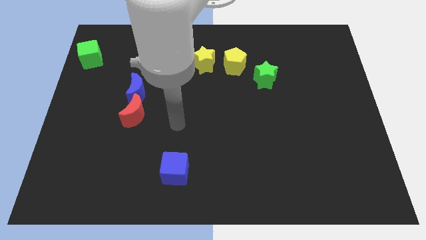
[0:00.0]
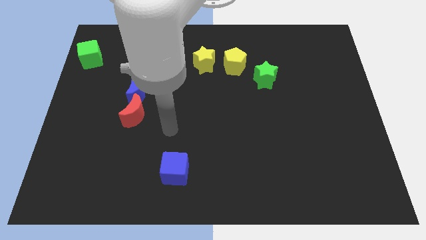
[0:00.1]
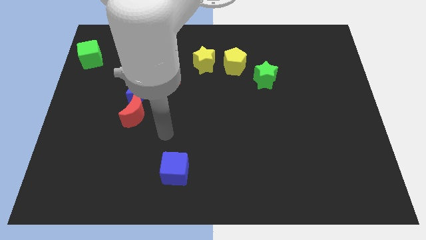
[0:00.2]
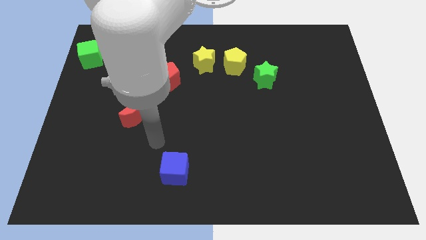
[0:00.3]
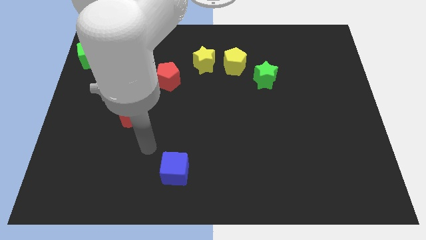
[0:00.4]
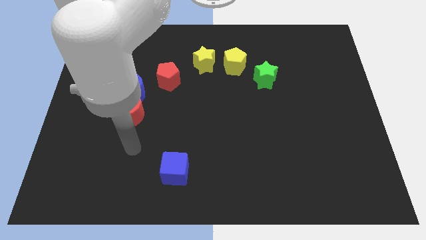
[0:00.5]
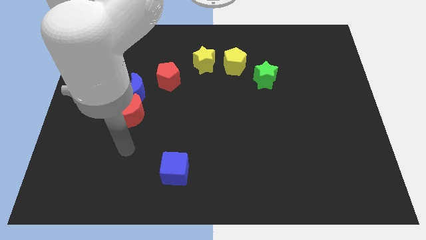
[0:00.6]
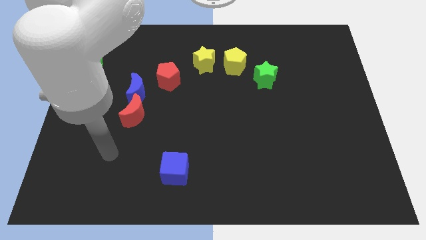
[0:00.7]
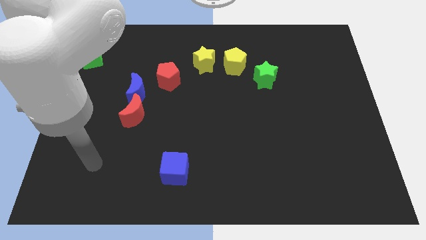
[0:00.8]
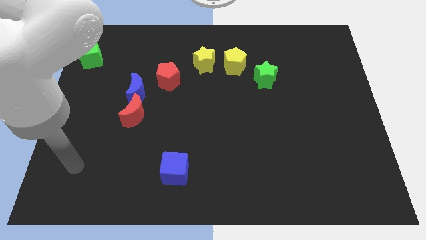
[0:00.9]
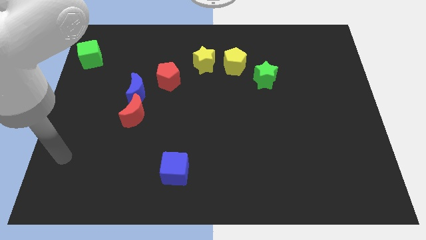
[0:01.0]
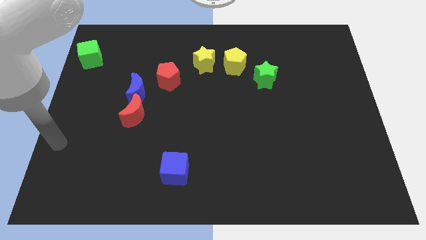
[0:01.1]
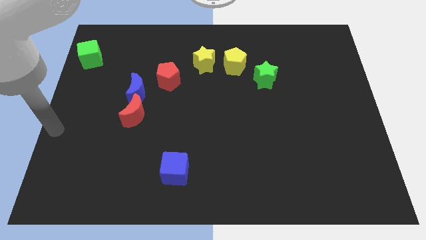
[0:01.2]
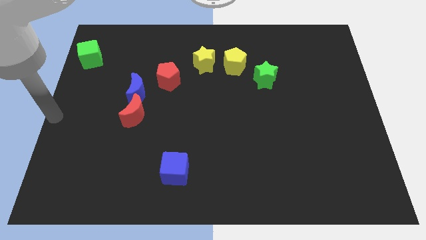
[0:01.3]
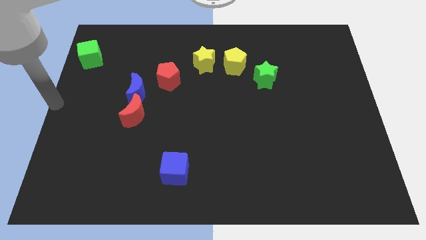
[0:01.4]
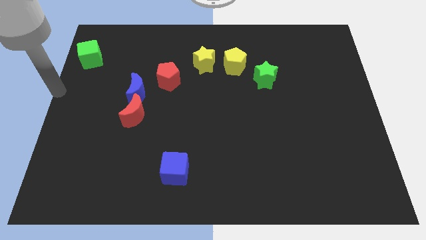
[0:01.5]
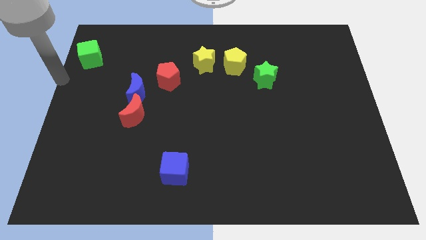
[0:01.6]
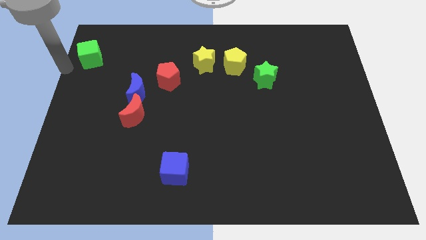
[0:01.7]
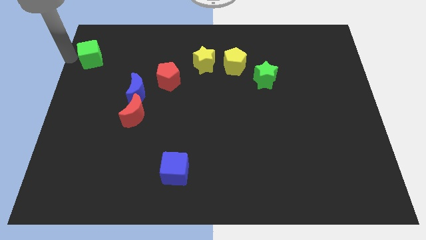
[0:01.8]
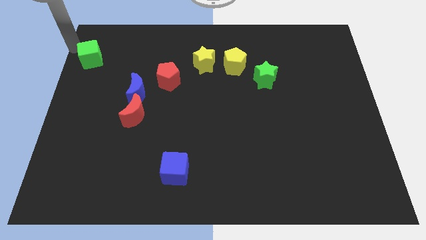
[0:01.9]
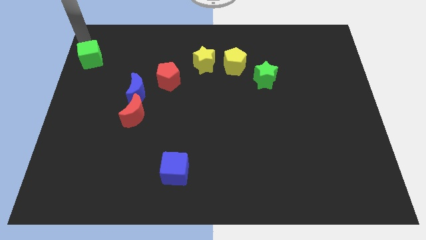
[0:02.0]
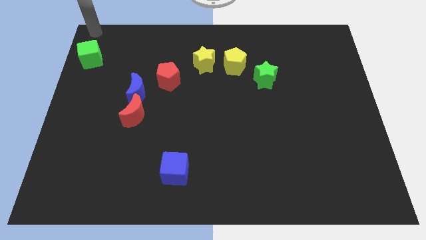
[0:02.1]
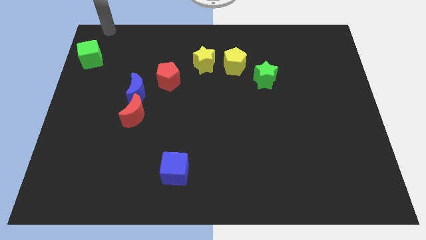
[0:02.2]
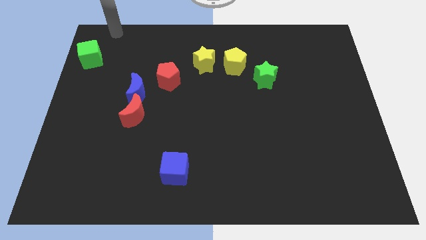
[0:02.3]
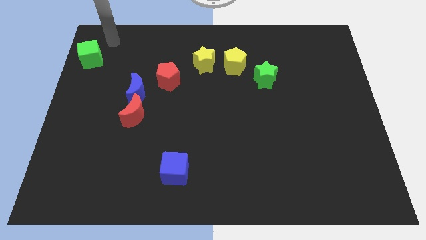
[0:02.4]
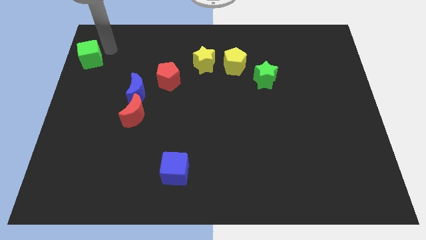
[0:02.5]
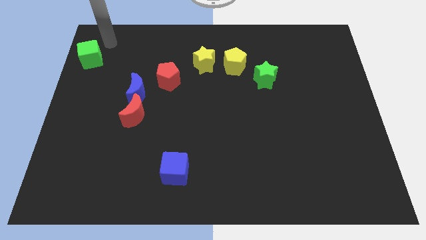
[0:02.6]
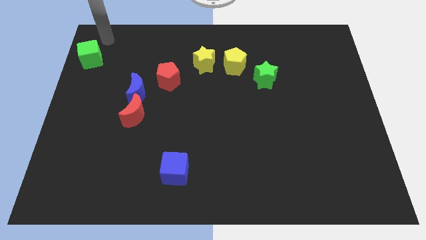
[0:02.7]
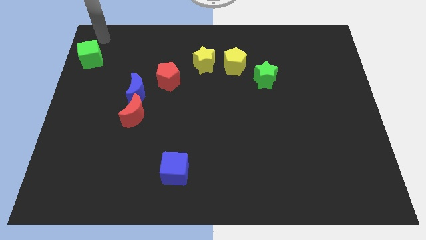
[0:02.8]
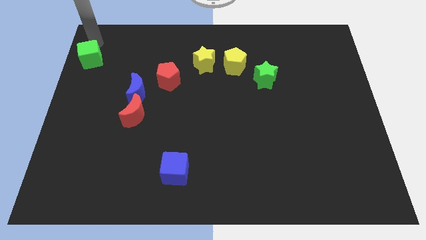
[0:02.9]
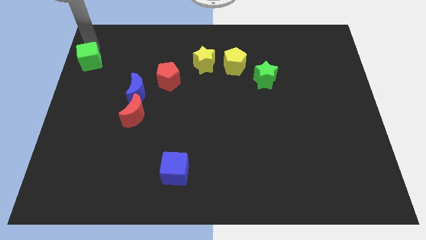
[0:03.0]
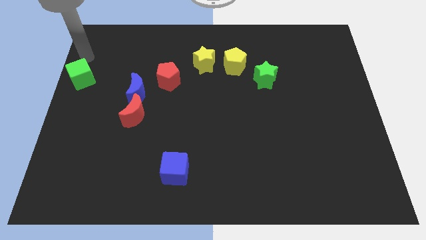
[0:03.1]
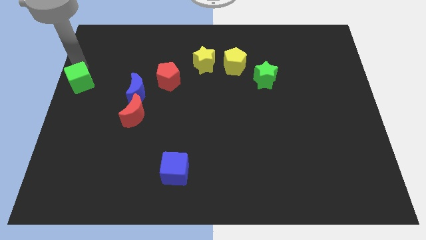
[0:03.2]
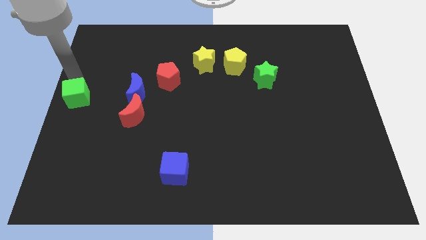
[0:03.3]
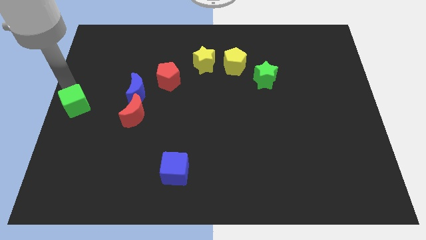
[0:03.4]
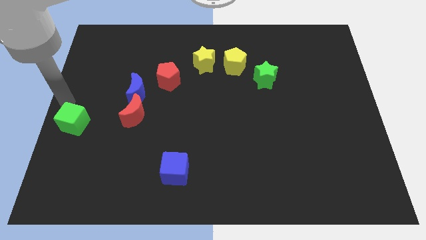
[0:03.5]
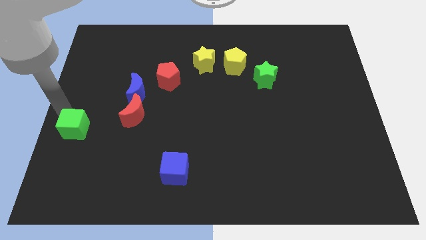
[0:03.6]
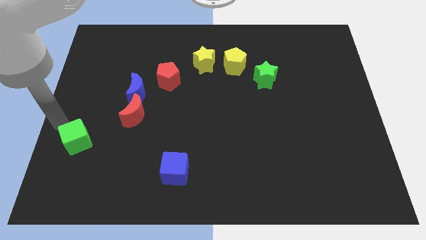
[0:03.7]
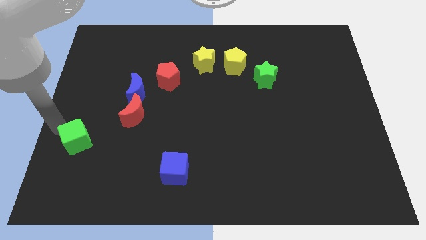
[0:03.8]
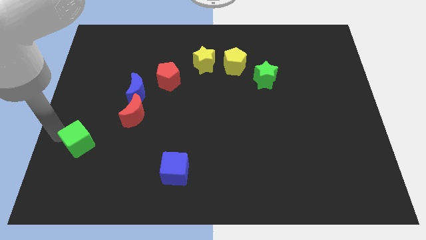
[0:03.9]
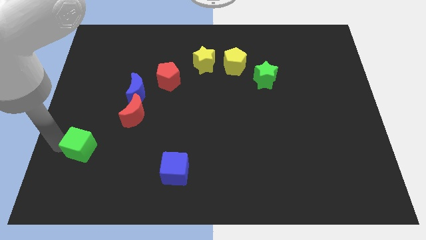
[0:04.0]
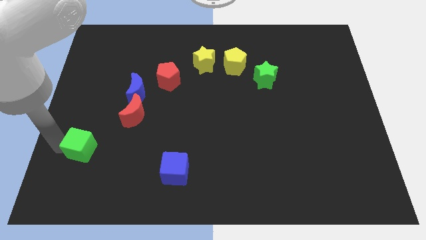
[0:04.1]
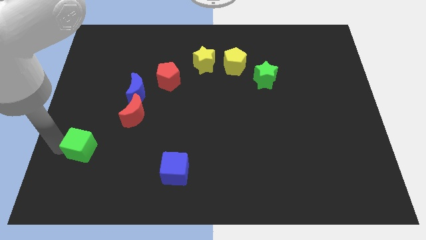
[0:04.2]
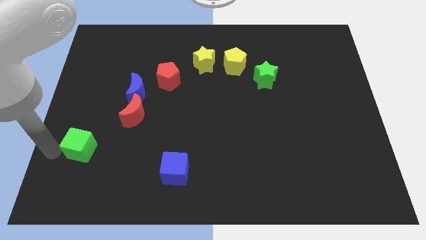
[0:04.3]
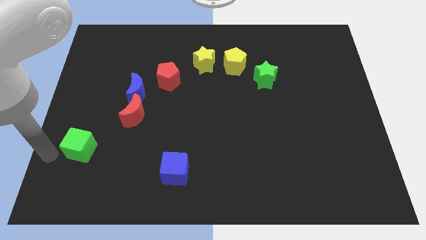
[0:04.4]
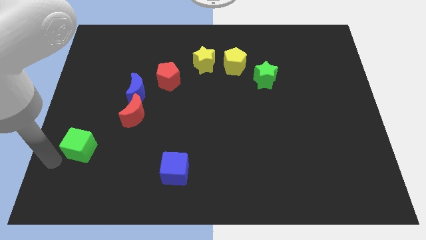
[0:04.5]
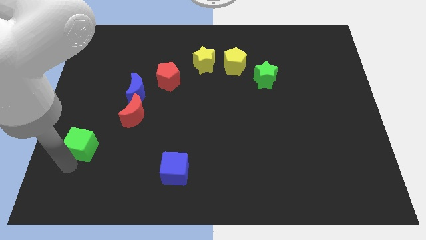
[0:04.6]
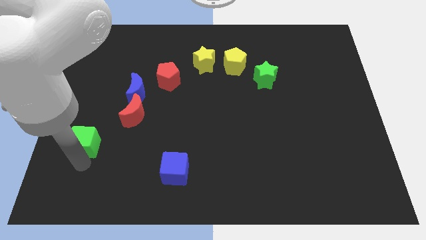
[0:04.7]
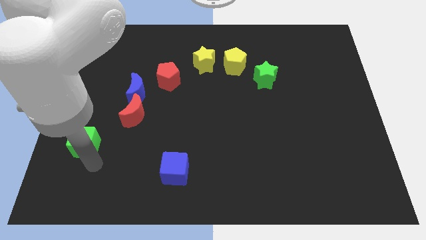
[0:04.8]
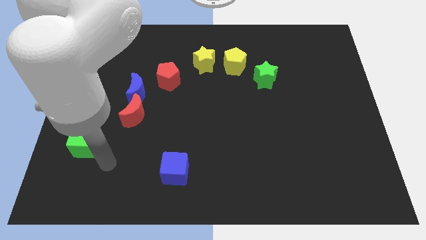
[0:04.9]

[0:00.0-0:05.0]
push green block downwards

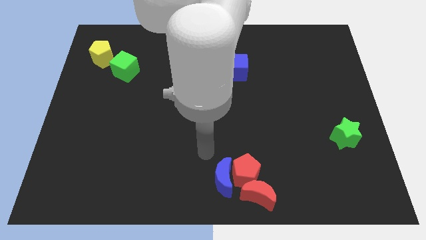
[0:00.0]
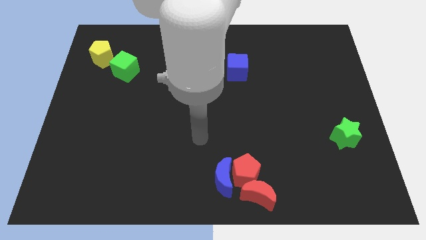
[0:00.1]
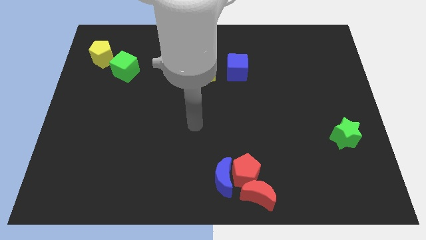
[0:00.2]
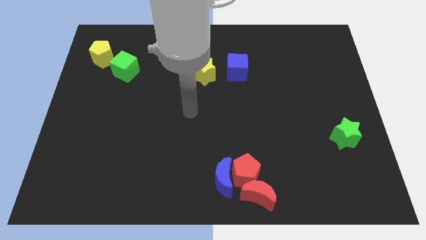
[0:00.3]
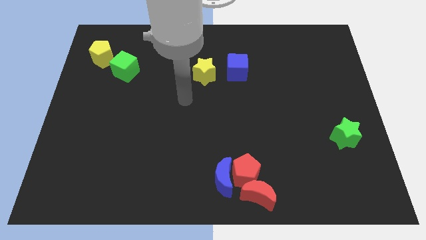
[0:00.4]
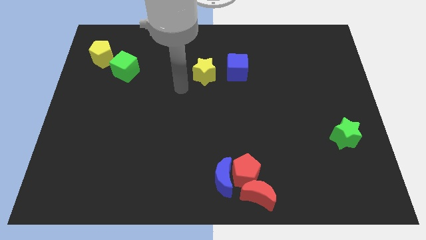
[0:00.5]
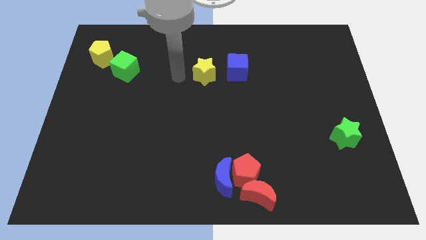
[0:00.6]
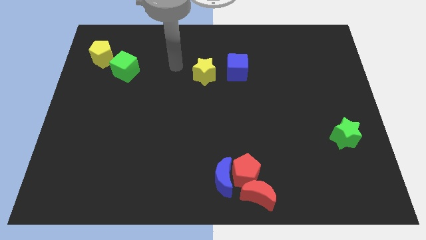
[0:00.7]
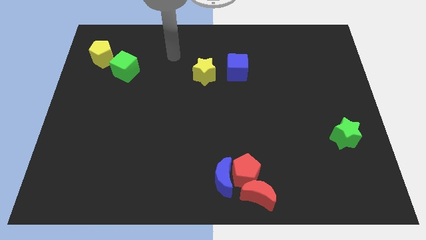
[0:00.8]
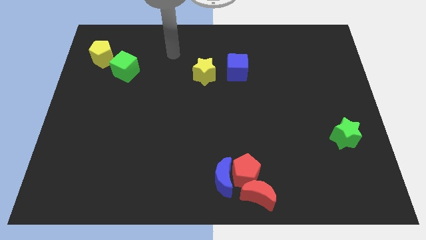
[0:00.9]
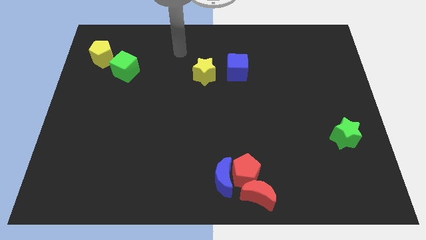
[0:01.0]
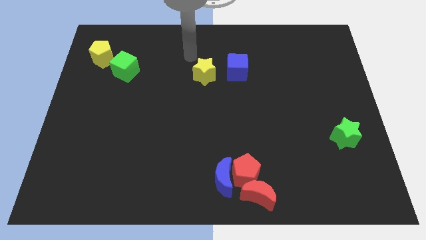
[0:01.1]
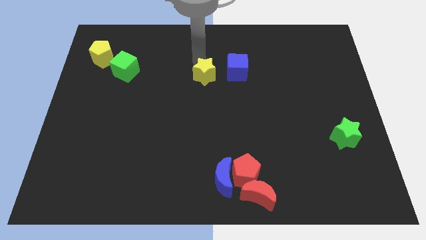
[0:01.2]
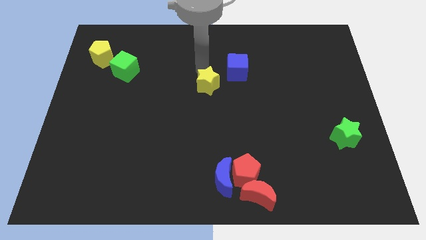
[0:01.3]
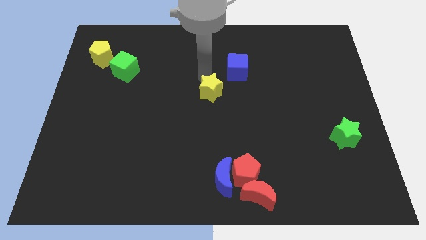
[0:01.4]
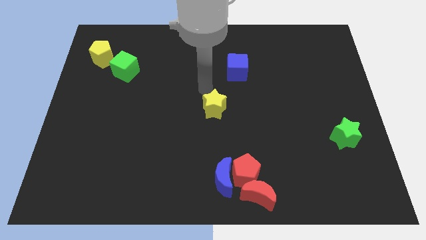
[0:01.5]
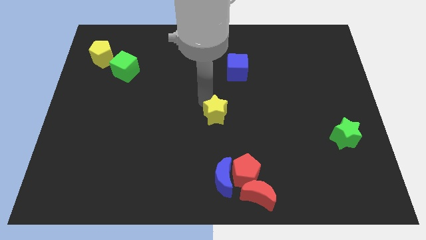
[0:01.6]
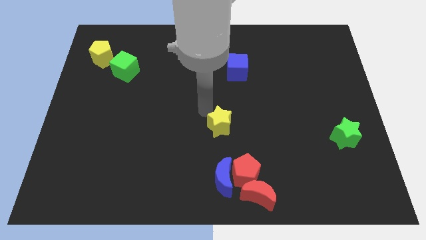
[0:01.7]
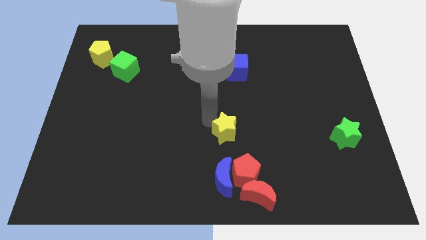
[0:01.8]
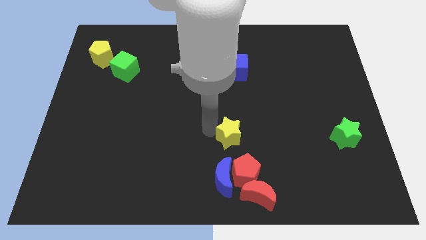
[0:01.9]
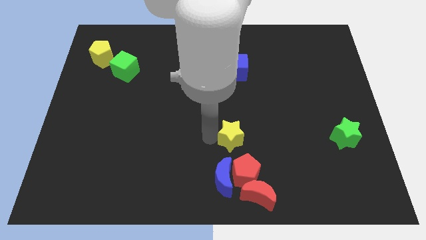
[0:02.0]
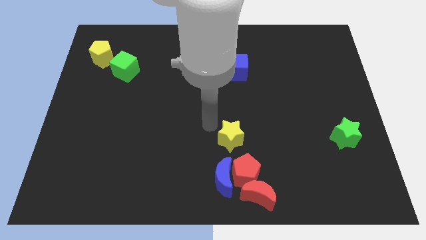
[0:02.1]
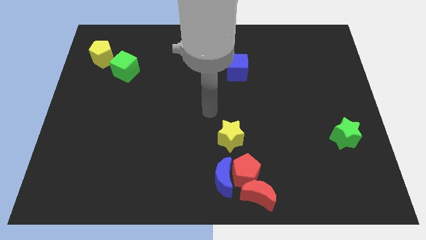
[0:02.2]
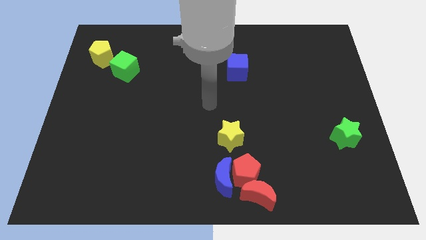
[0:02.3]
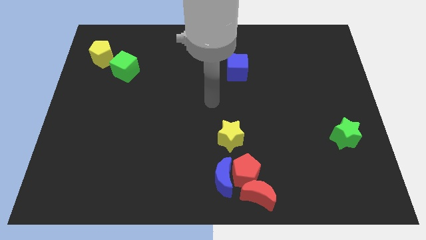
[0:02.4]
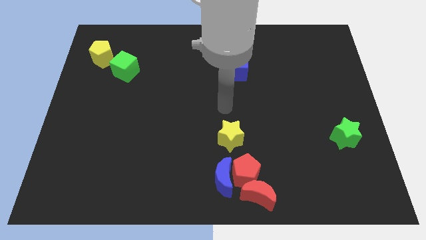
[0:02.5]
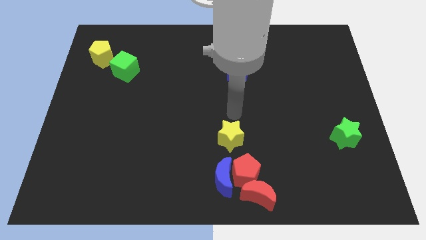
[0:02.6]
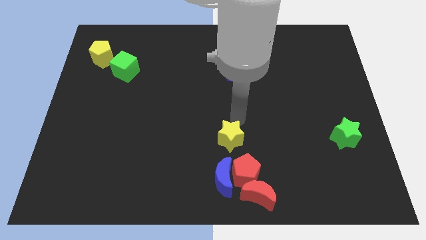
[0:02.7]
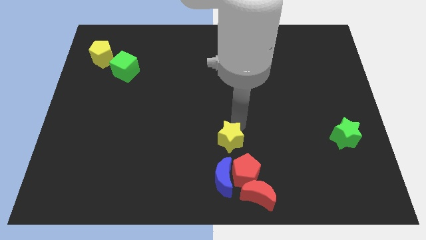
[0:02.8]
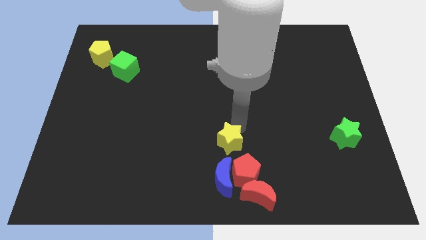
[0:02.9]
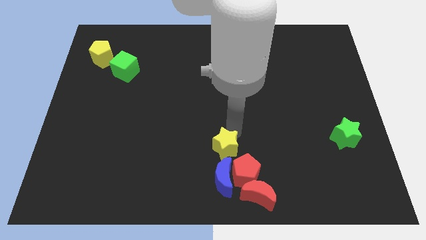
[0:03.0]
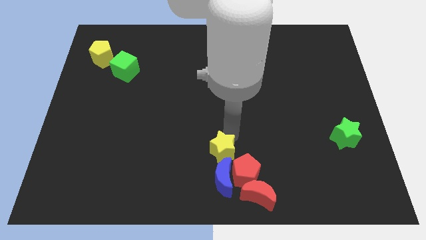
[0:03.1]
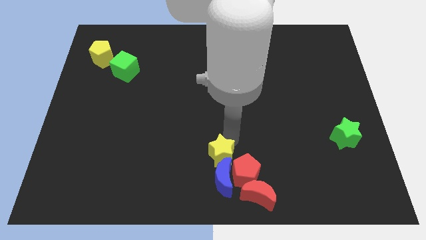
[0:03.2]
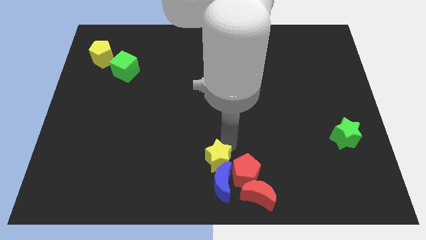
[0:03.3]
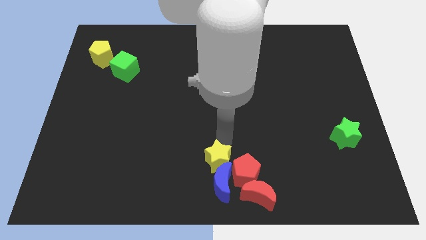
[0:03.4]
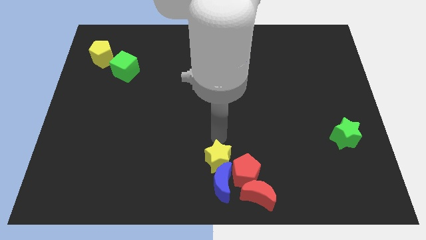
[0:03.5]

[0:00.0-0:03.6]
push the yellow star into blue crescent

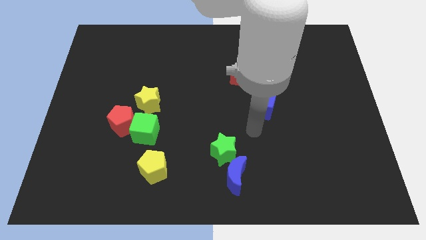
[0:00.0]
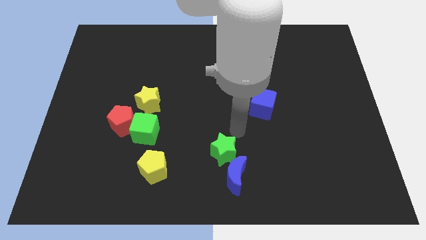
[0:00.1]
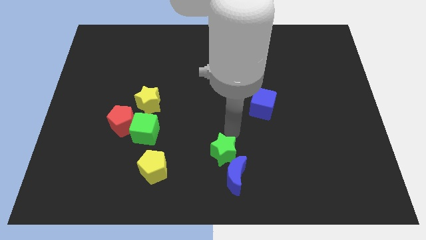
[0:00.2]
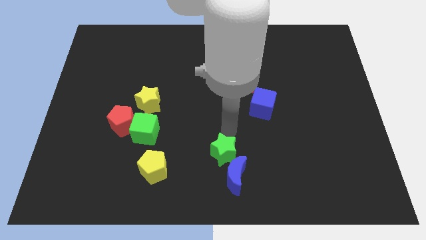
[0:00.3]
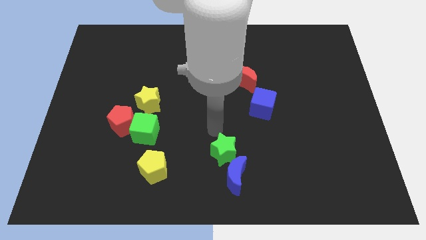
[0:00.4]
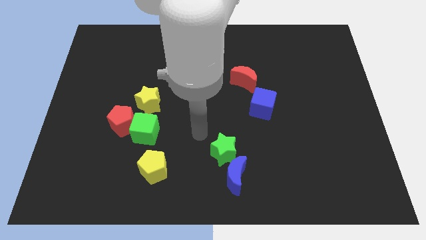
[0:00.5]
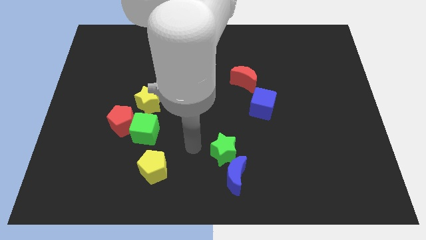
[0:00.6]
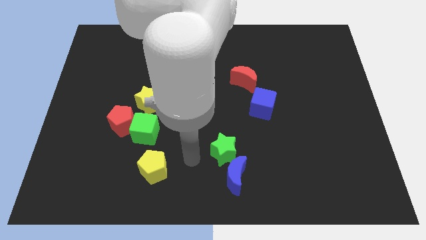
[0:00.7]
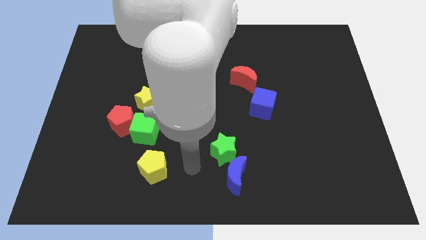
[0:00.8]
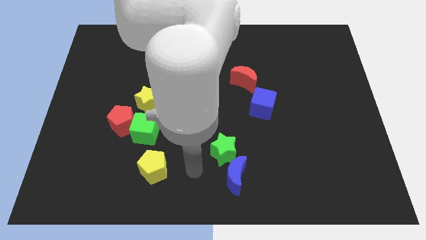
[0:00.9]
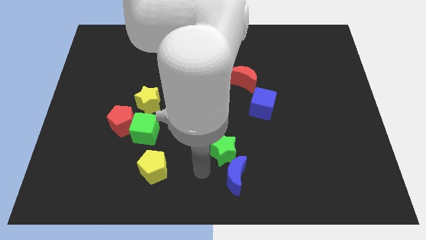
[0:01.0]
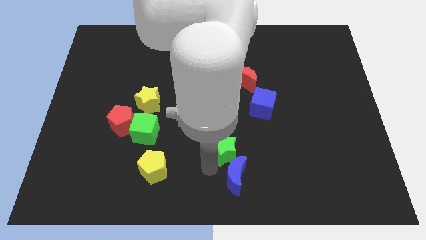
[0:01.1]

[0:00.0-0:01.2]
place your arm to the bottom of green star
